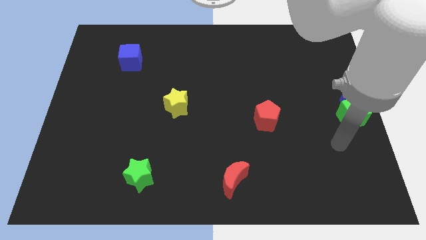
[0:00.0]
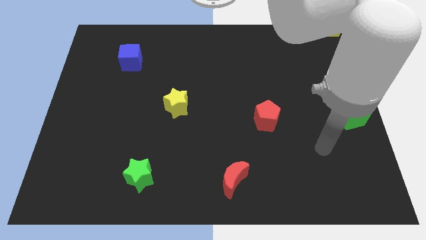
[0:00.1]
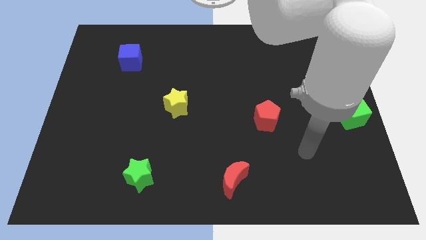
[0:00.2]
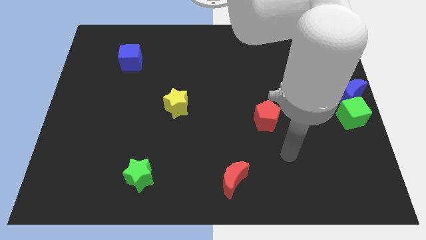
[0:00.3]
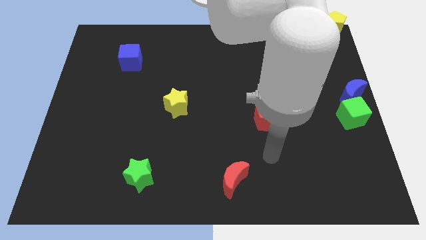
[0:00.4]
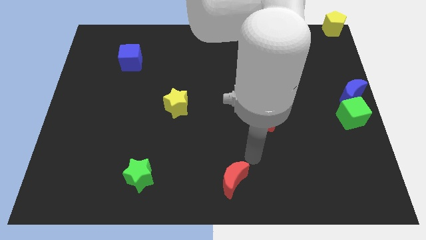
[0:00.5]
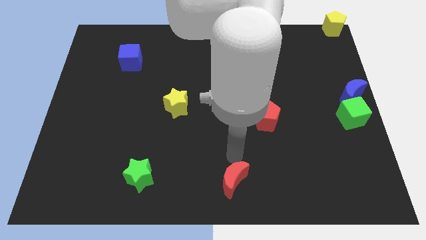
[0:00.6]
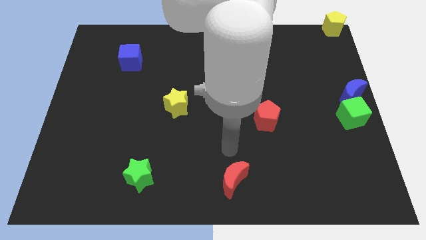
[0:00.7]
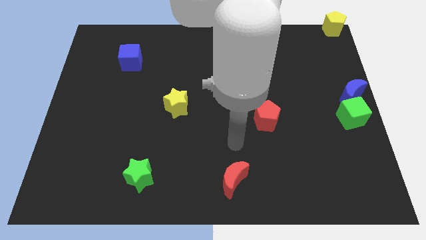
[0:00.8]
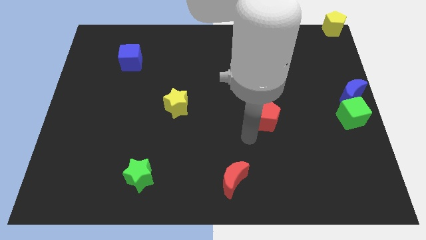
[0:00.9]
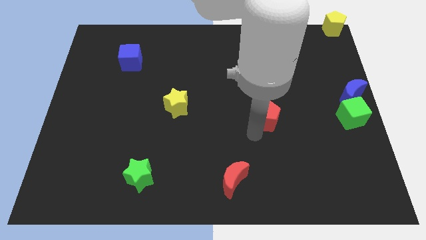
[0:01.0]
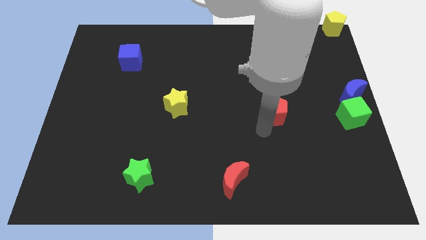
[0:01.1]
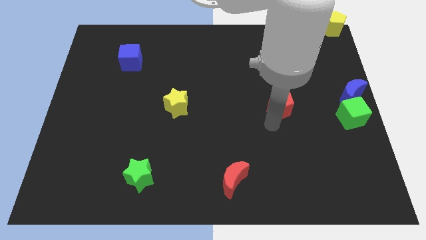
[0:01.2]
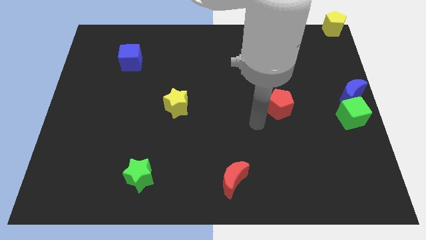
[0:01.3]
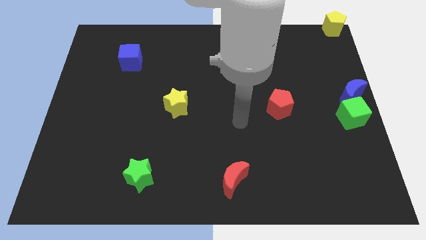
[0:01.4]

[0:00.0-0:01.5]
place your hand above the red crescent

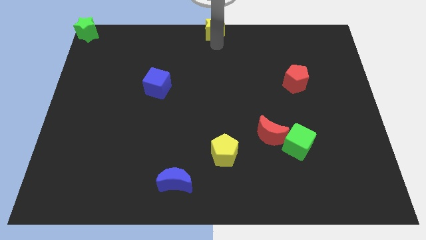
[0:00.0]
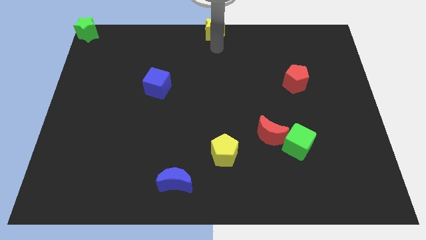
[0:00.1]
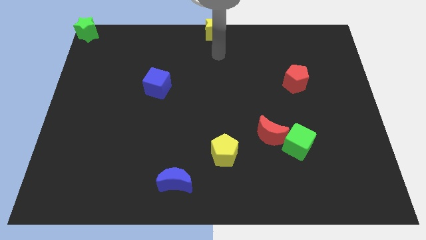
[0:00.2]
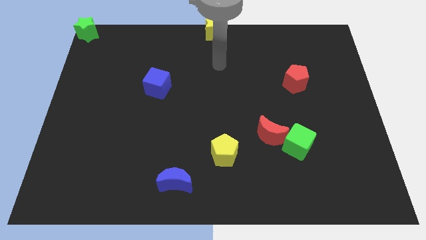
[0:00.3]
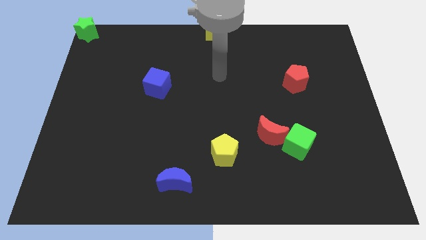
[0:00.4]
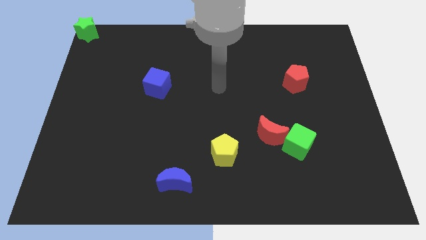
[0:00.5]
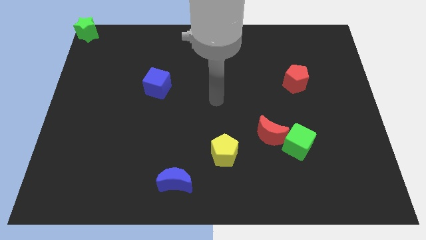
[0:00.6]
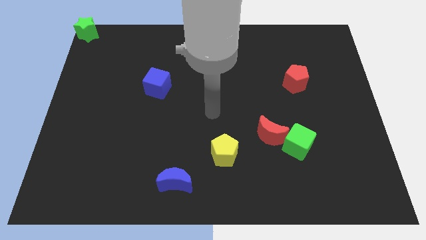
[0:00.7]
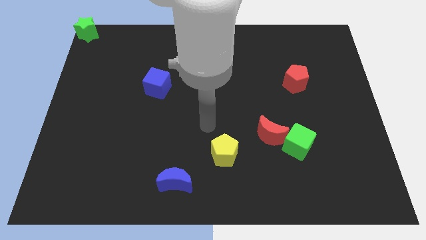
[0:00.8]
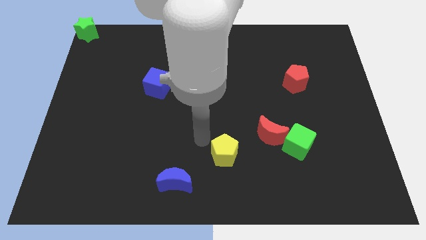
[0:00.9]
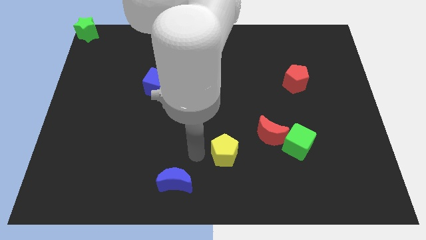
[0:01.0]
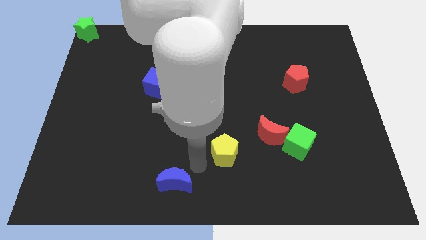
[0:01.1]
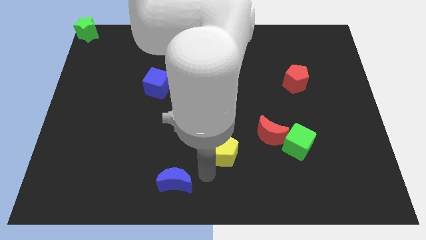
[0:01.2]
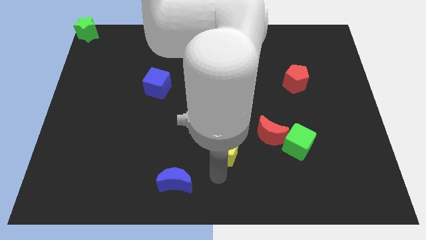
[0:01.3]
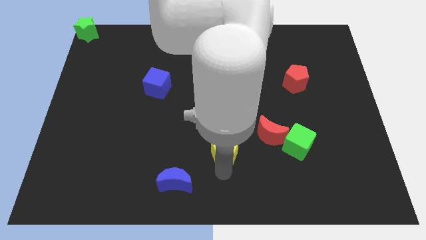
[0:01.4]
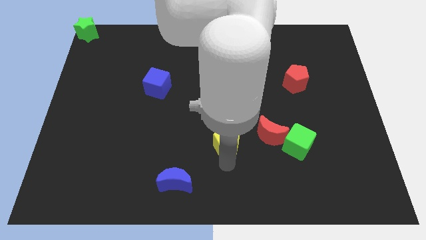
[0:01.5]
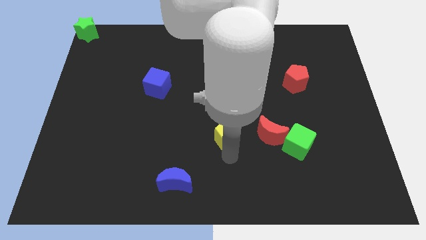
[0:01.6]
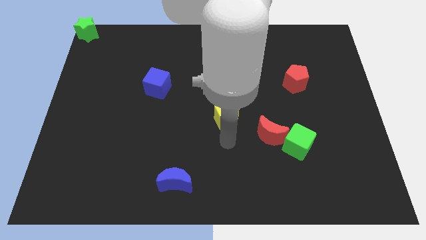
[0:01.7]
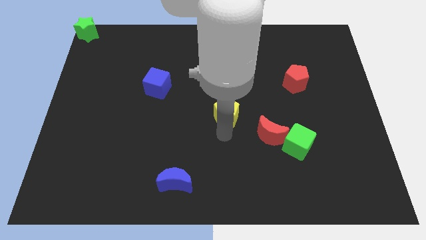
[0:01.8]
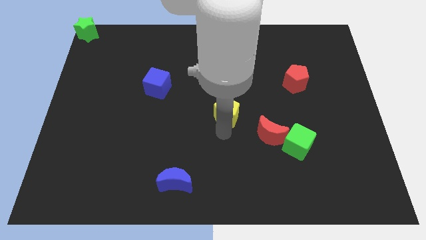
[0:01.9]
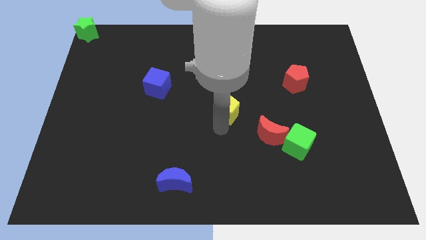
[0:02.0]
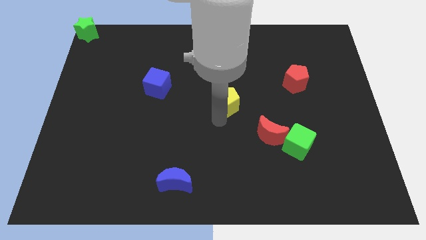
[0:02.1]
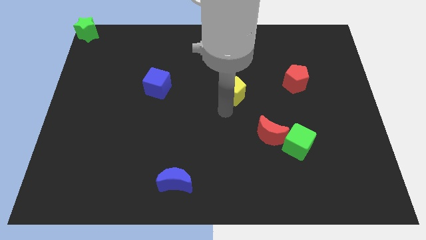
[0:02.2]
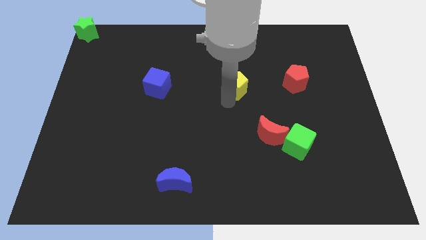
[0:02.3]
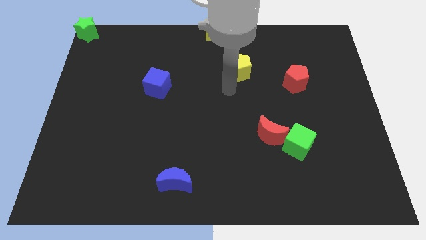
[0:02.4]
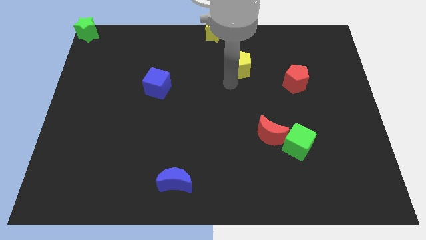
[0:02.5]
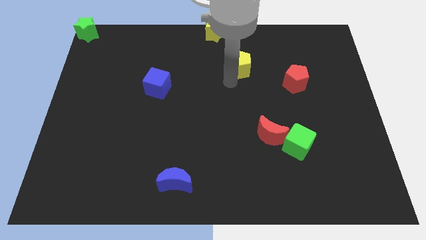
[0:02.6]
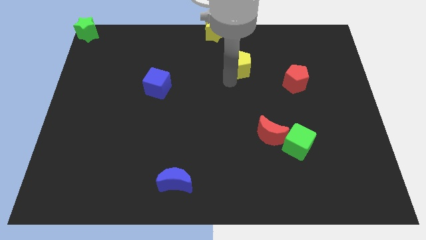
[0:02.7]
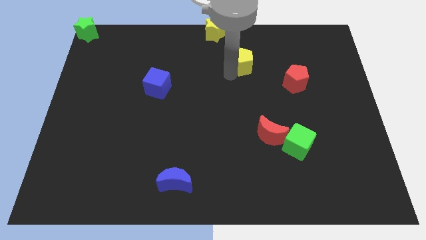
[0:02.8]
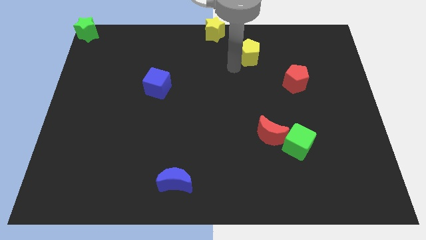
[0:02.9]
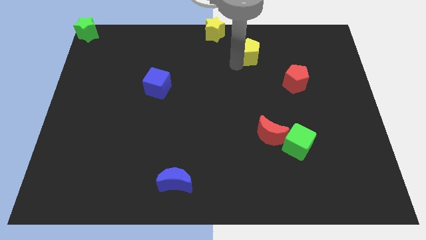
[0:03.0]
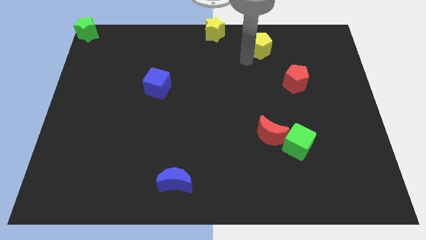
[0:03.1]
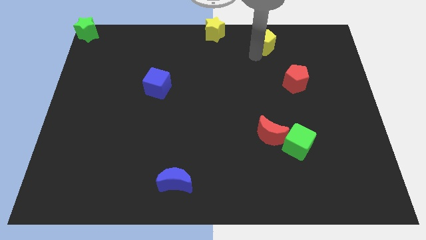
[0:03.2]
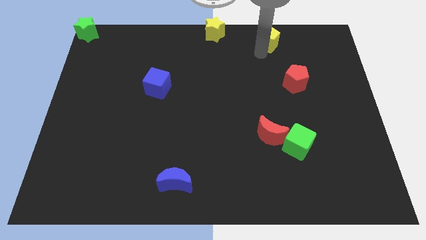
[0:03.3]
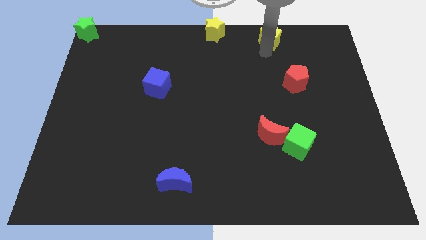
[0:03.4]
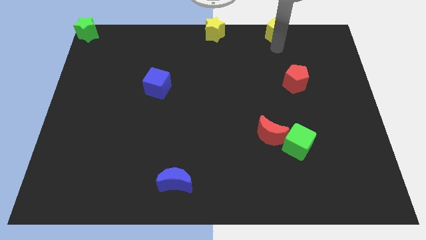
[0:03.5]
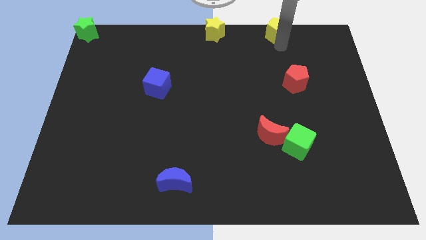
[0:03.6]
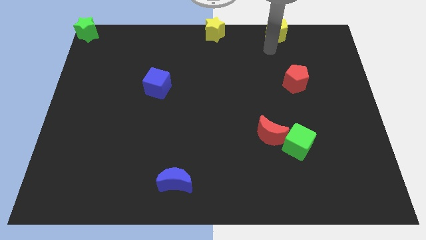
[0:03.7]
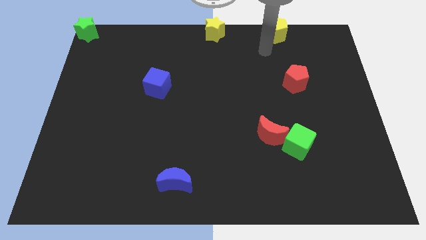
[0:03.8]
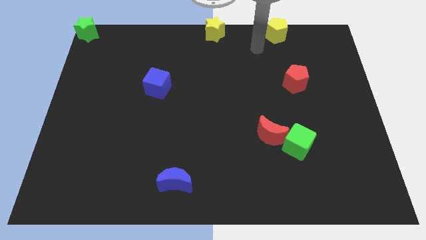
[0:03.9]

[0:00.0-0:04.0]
push the yellow pentagon to the right of the yellow star

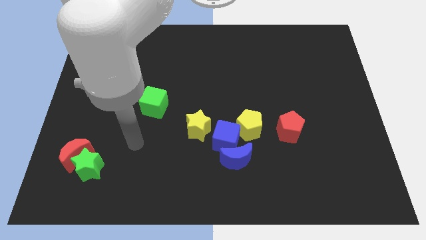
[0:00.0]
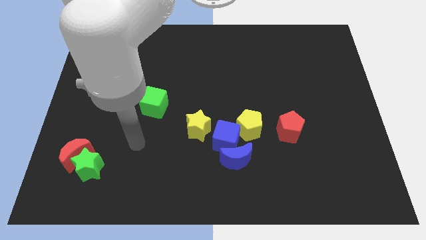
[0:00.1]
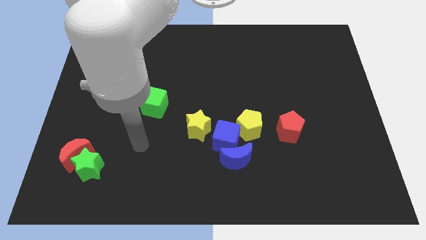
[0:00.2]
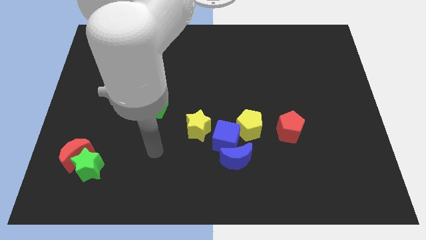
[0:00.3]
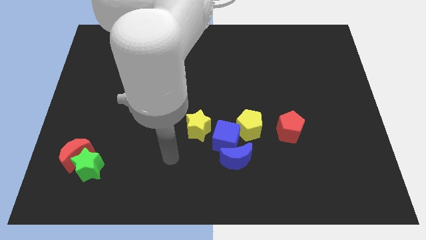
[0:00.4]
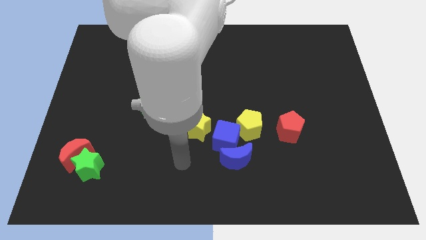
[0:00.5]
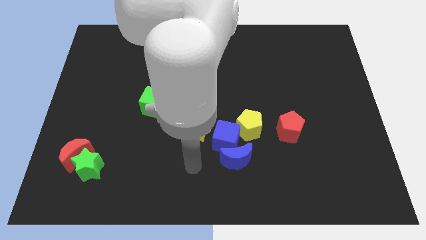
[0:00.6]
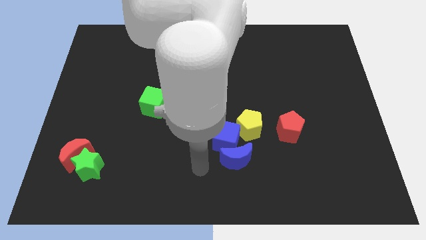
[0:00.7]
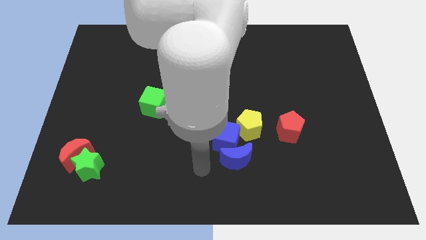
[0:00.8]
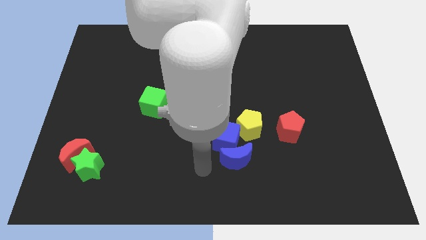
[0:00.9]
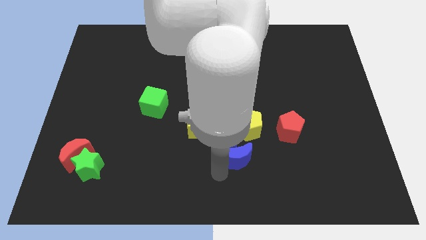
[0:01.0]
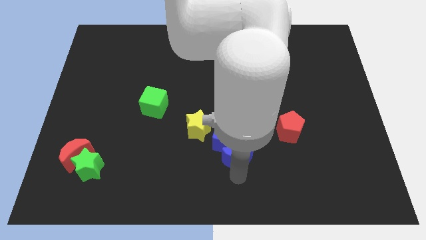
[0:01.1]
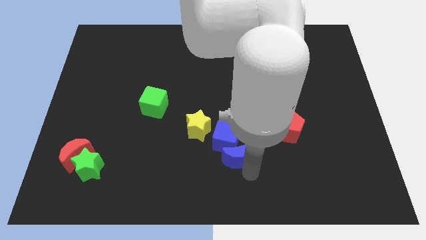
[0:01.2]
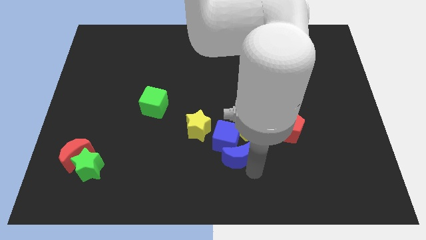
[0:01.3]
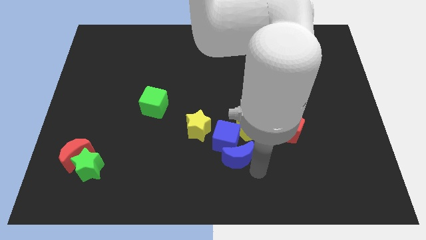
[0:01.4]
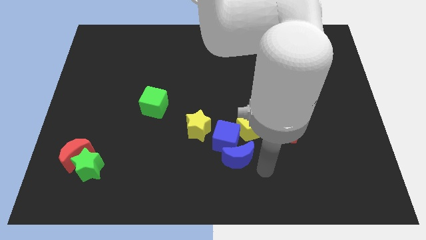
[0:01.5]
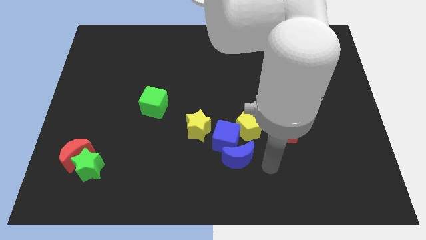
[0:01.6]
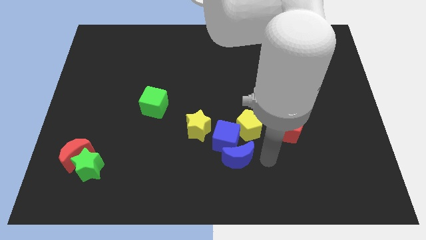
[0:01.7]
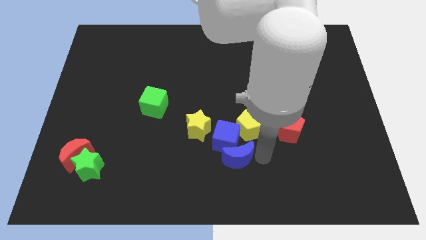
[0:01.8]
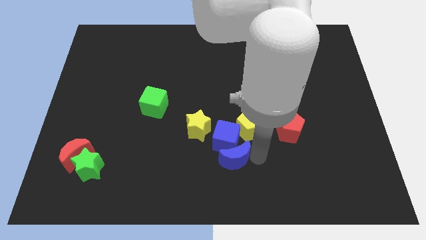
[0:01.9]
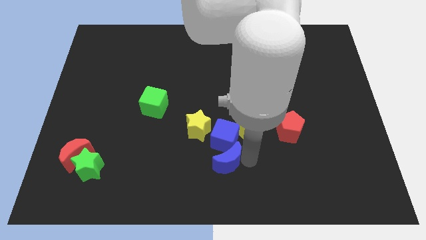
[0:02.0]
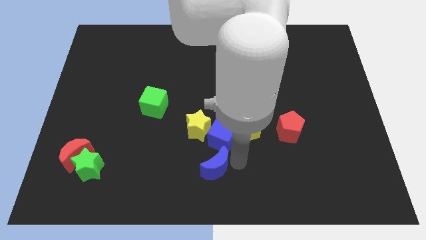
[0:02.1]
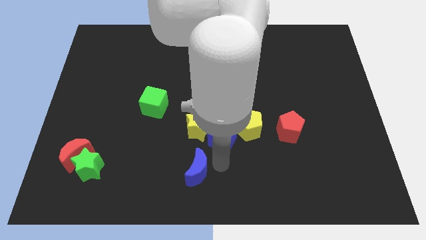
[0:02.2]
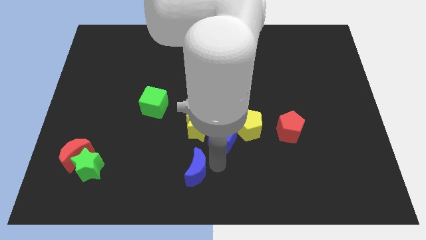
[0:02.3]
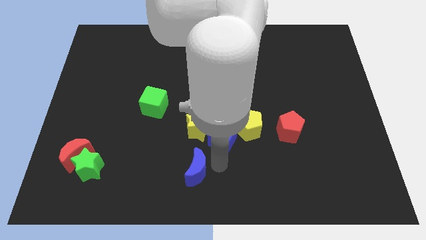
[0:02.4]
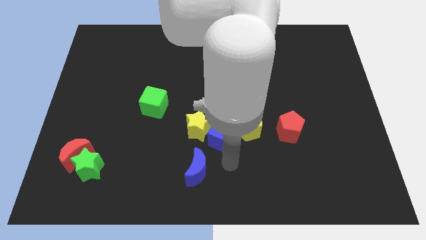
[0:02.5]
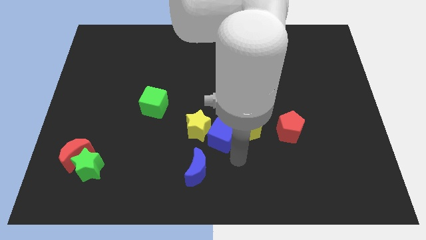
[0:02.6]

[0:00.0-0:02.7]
separate the blue moon from the blue cube

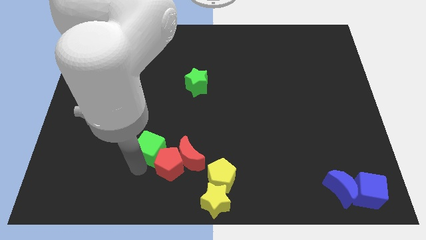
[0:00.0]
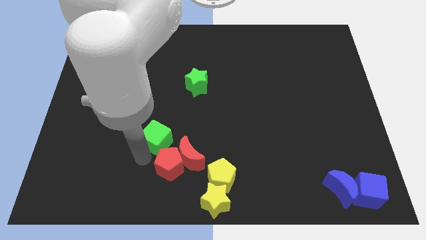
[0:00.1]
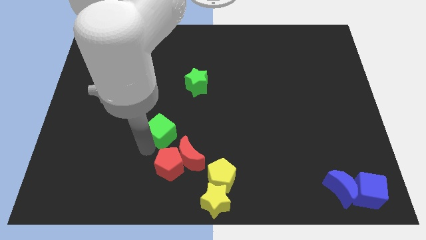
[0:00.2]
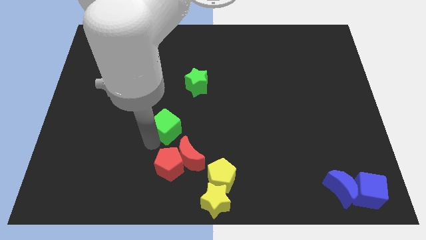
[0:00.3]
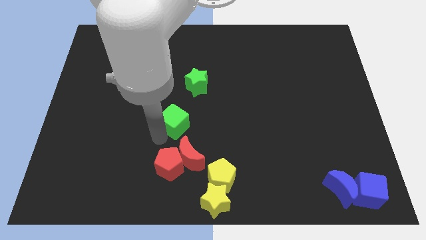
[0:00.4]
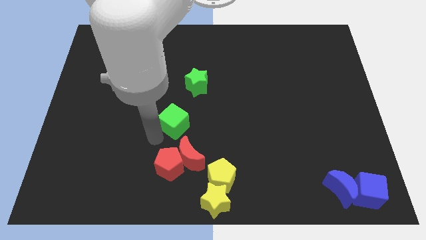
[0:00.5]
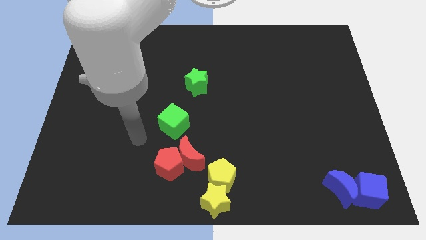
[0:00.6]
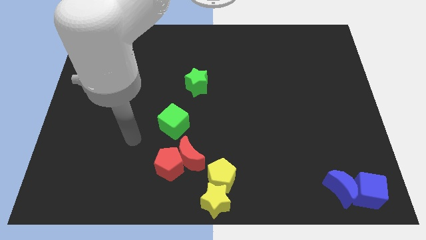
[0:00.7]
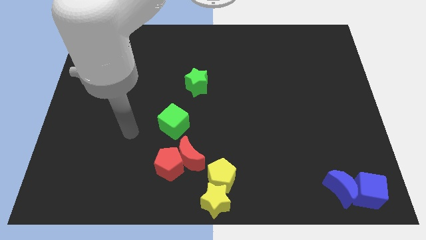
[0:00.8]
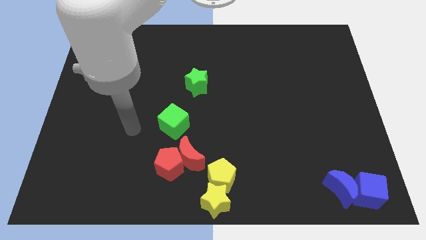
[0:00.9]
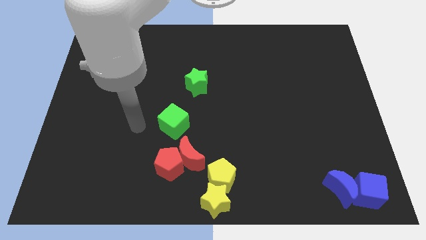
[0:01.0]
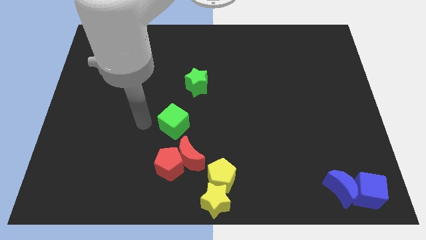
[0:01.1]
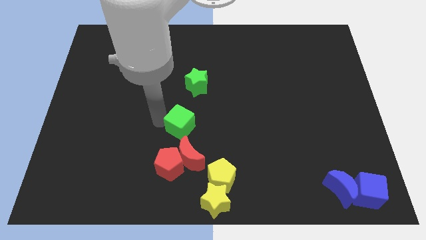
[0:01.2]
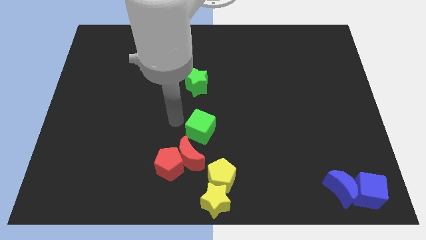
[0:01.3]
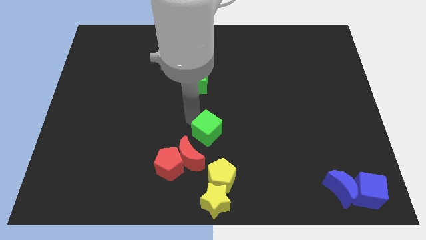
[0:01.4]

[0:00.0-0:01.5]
place the green cube below the green star
